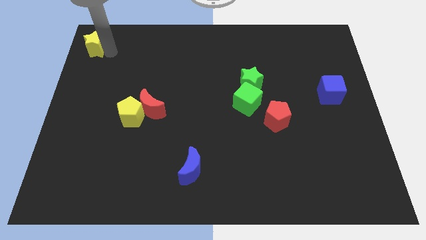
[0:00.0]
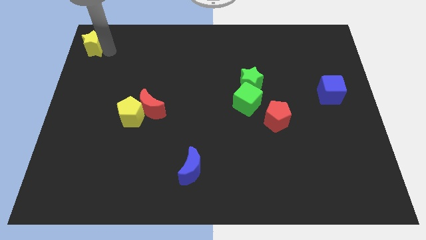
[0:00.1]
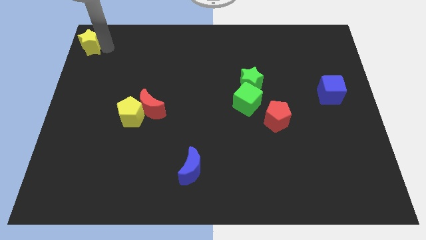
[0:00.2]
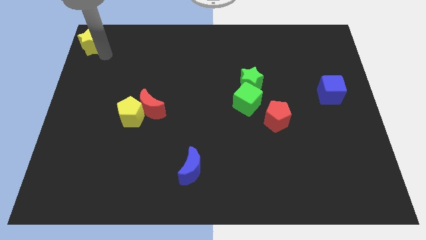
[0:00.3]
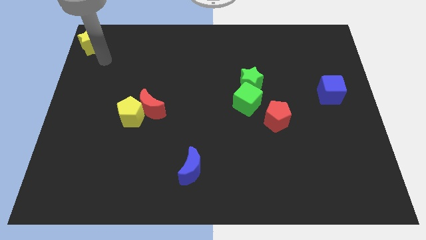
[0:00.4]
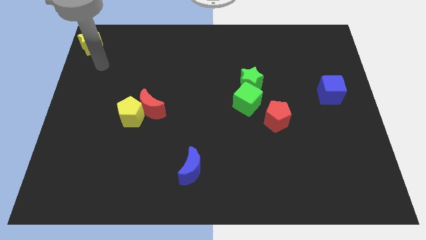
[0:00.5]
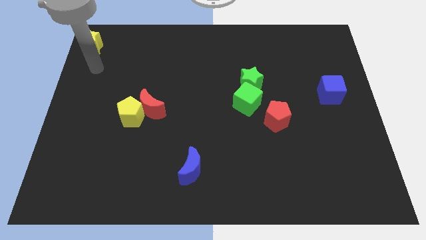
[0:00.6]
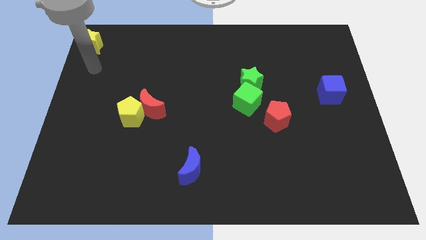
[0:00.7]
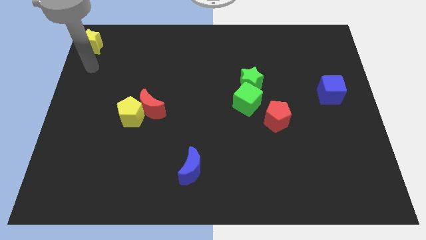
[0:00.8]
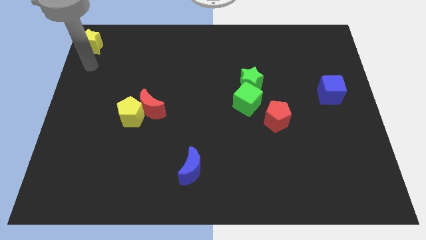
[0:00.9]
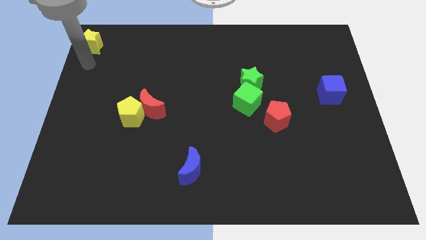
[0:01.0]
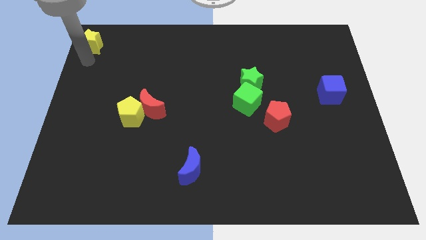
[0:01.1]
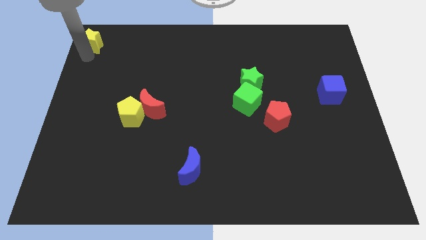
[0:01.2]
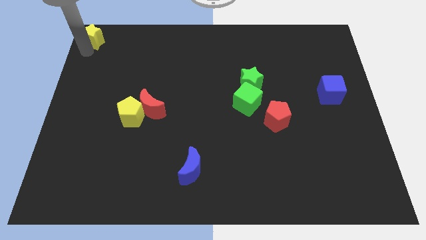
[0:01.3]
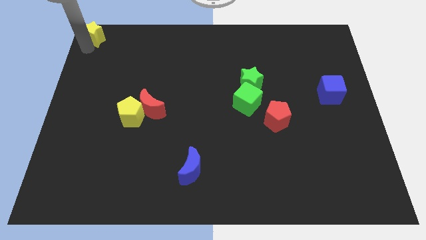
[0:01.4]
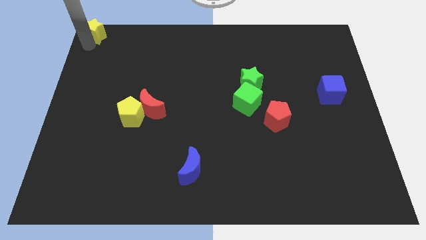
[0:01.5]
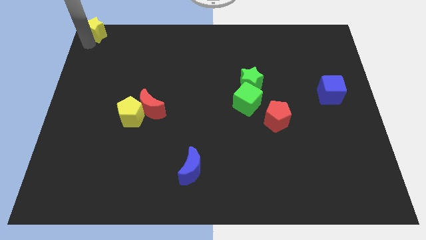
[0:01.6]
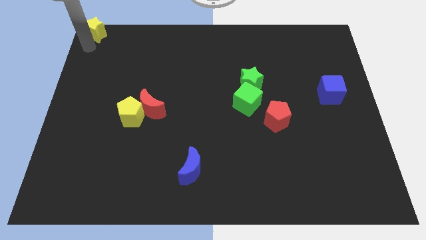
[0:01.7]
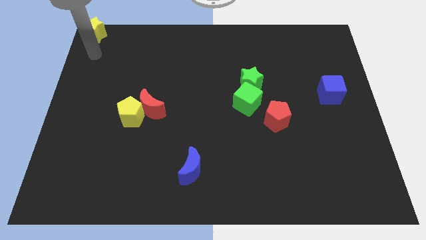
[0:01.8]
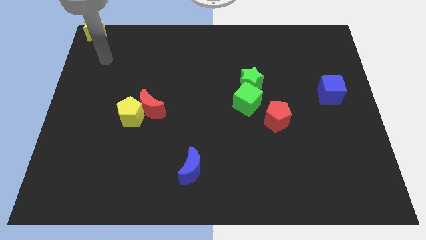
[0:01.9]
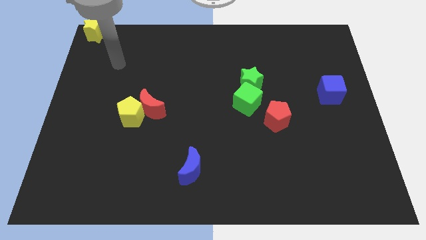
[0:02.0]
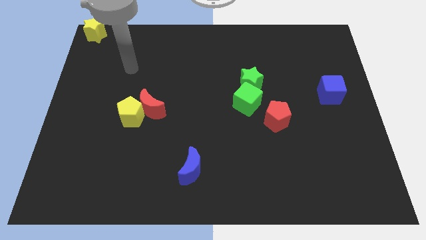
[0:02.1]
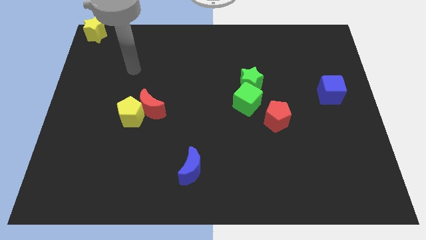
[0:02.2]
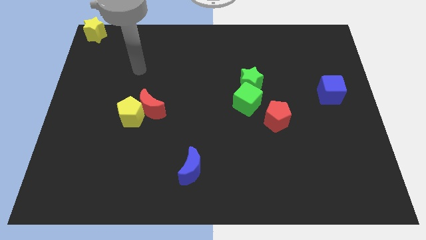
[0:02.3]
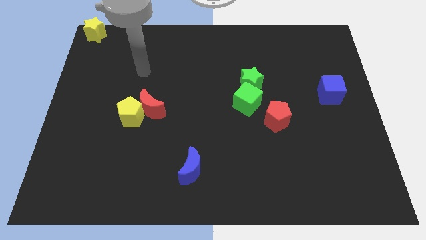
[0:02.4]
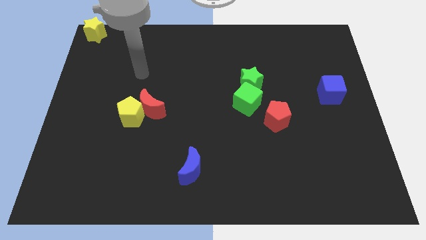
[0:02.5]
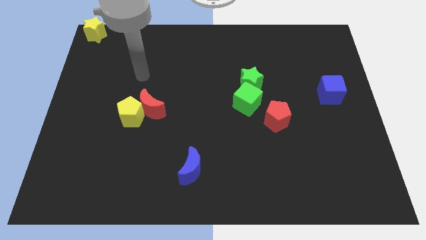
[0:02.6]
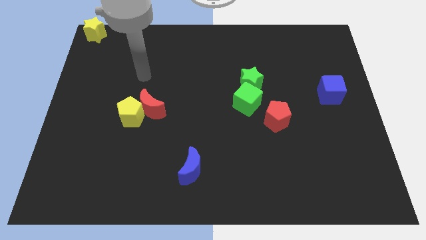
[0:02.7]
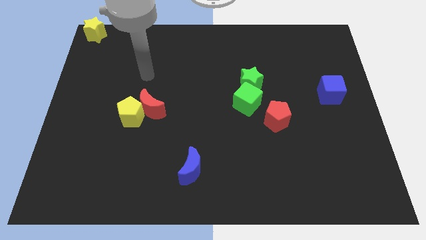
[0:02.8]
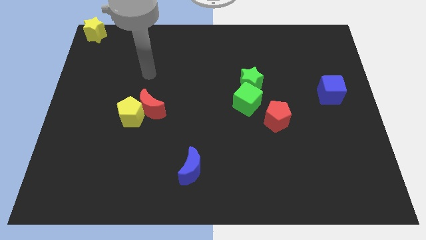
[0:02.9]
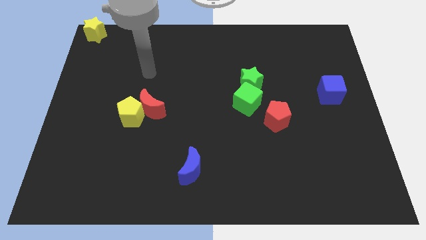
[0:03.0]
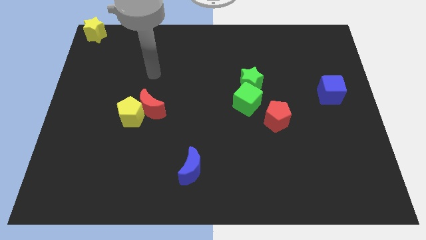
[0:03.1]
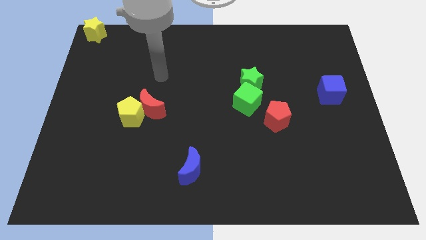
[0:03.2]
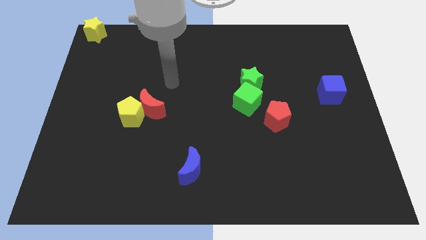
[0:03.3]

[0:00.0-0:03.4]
place the yellow star to the top right

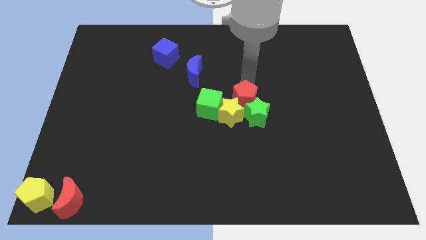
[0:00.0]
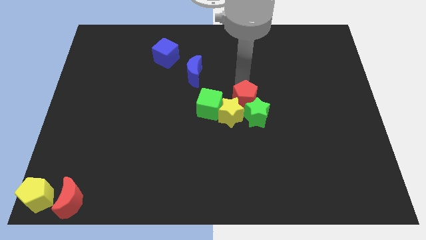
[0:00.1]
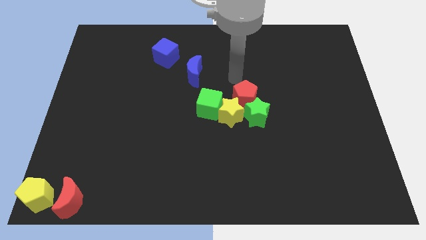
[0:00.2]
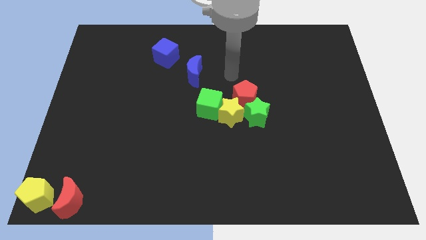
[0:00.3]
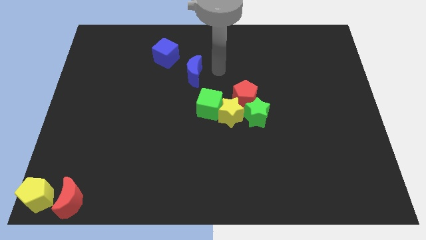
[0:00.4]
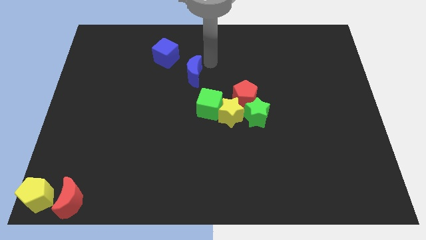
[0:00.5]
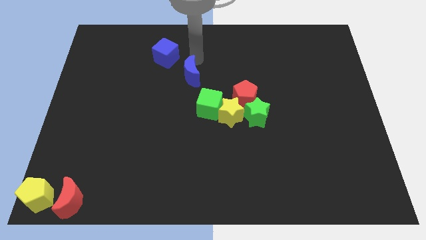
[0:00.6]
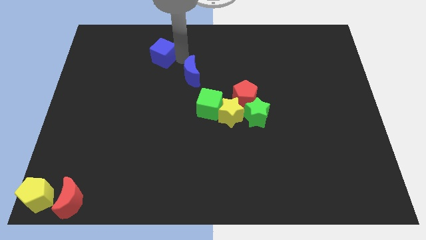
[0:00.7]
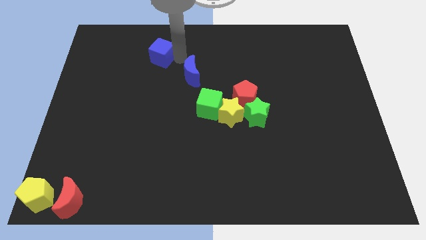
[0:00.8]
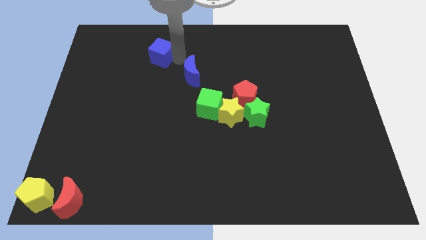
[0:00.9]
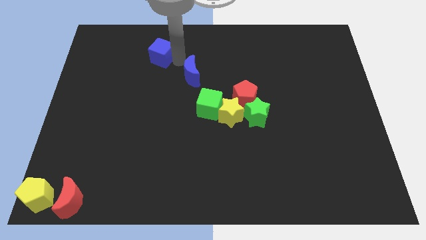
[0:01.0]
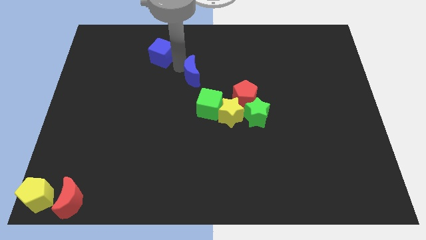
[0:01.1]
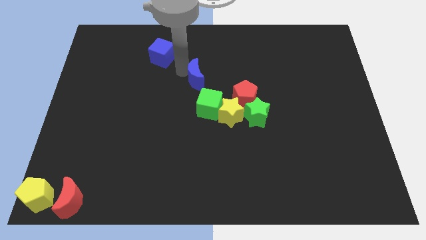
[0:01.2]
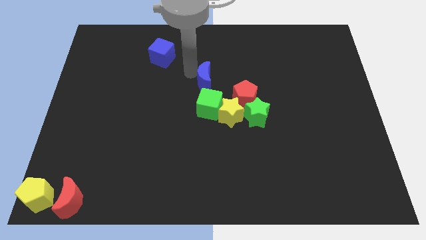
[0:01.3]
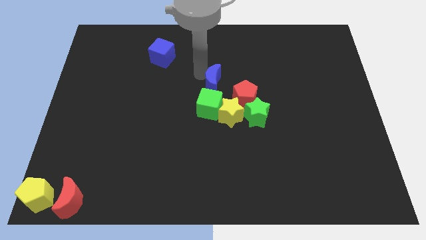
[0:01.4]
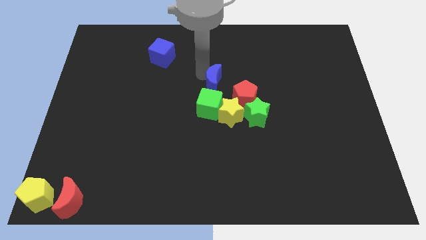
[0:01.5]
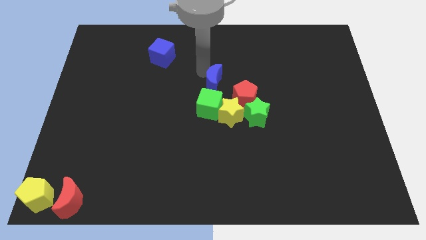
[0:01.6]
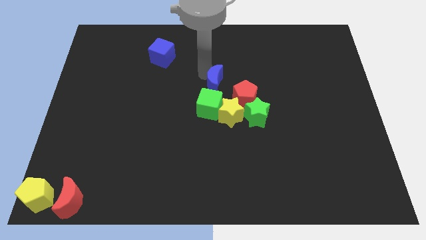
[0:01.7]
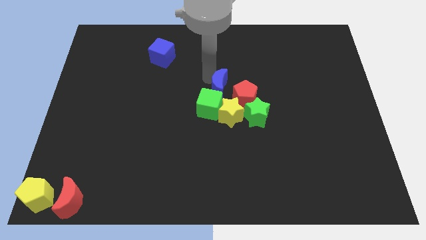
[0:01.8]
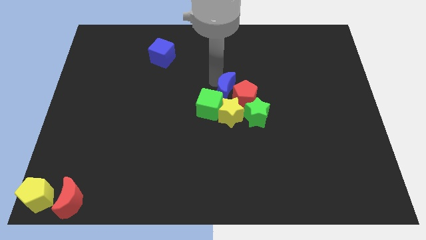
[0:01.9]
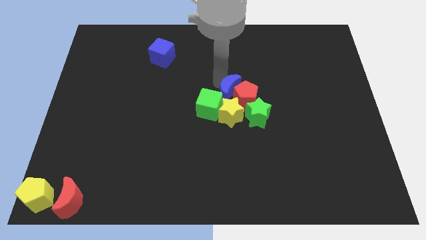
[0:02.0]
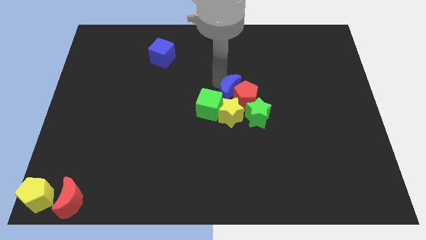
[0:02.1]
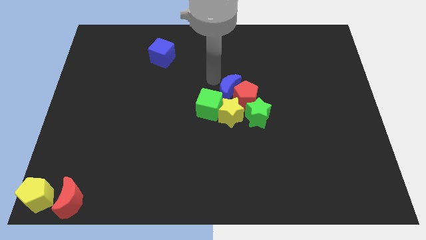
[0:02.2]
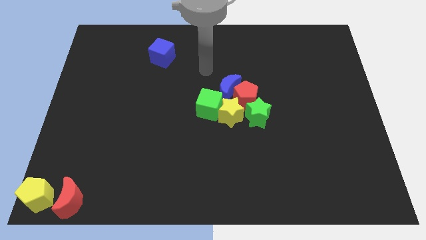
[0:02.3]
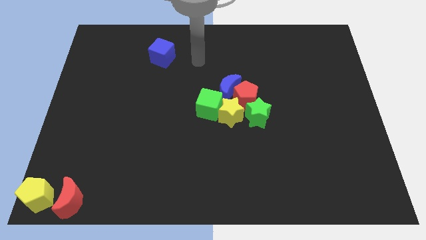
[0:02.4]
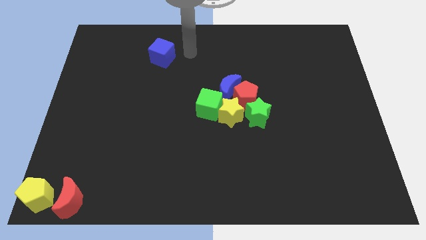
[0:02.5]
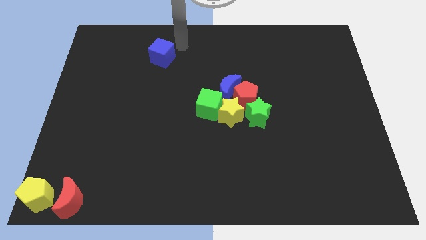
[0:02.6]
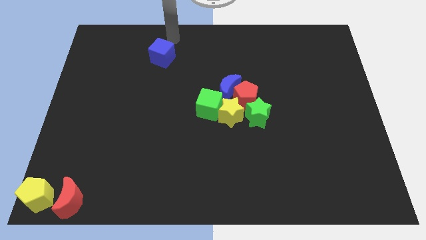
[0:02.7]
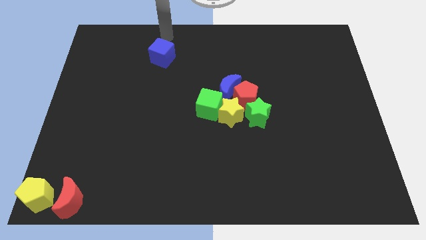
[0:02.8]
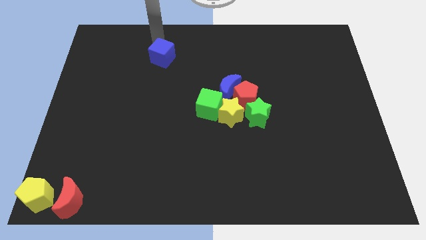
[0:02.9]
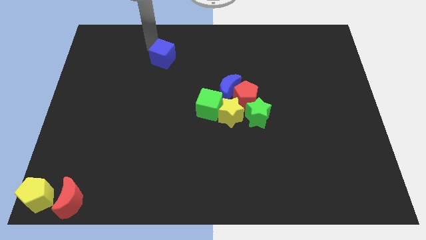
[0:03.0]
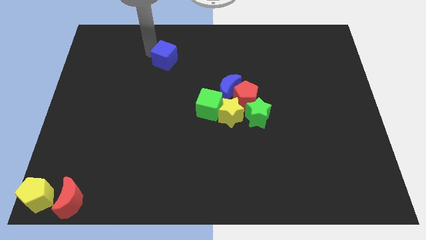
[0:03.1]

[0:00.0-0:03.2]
move the blue crescent towards the topa of the red pentagon

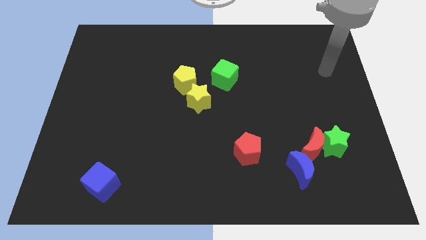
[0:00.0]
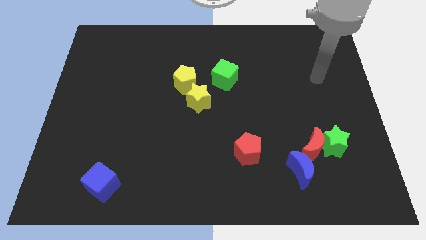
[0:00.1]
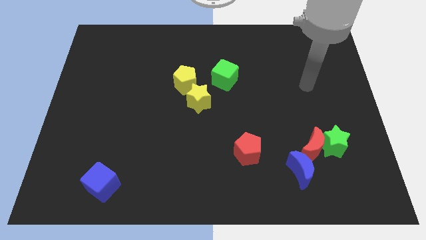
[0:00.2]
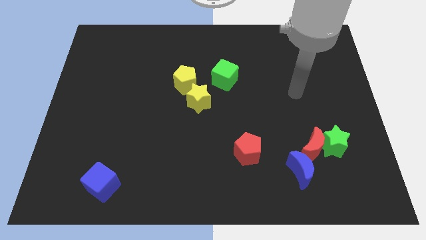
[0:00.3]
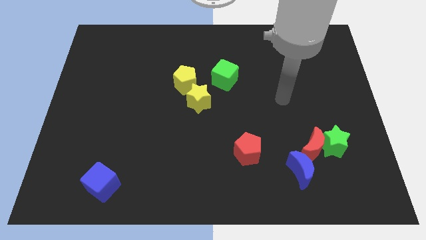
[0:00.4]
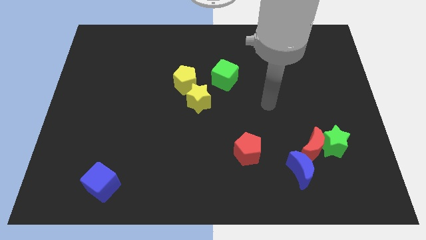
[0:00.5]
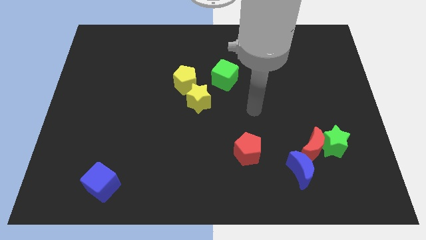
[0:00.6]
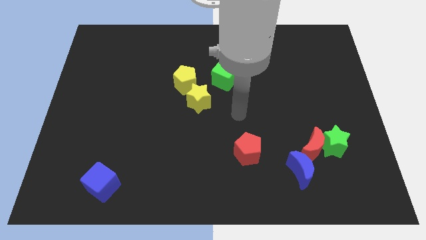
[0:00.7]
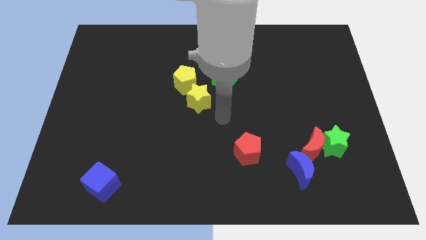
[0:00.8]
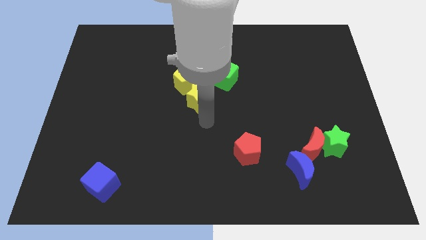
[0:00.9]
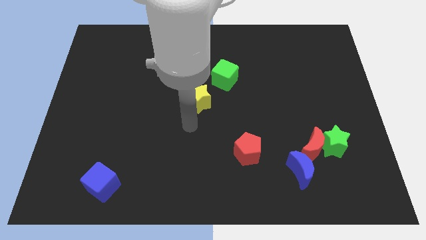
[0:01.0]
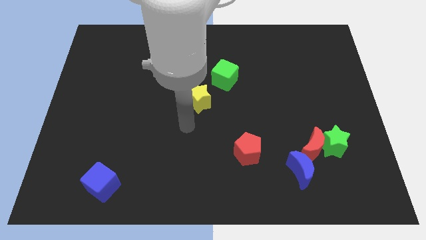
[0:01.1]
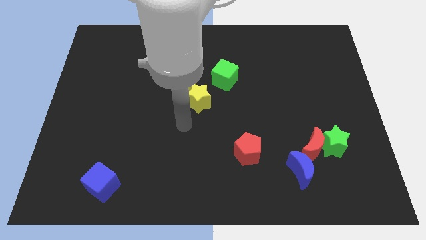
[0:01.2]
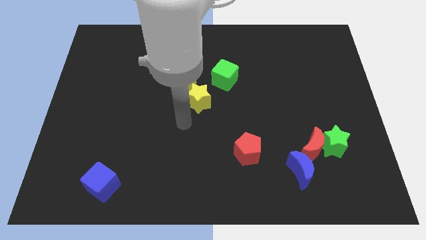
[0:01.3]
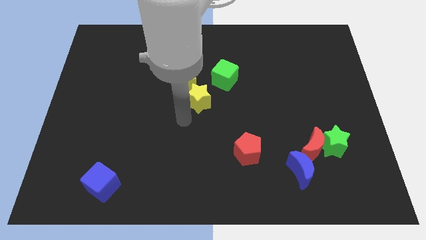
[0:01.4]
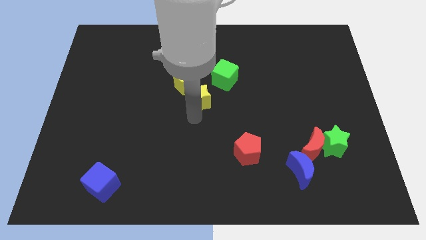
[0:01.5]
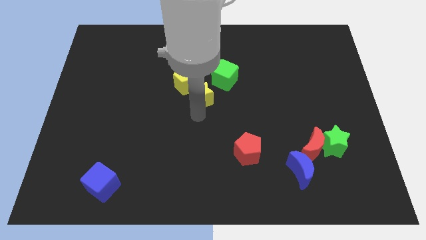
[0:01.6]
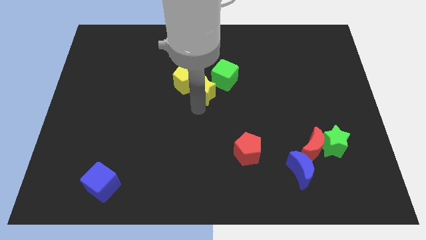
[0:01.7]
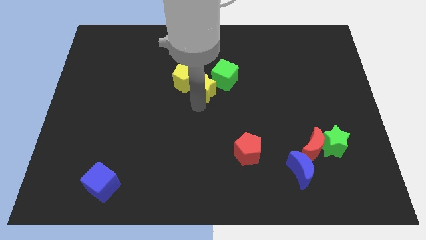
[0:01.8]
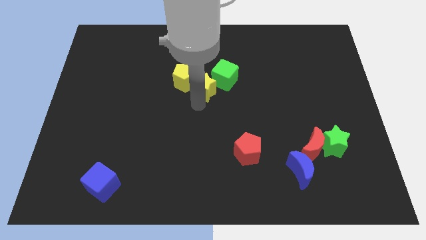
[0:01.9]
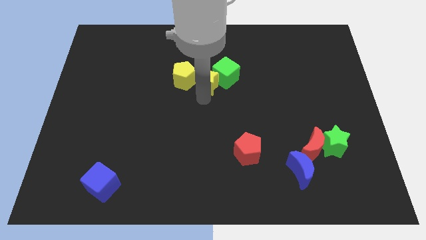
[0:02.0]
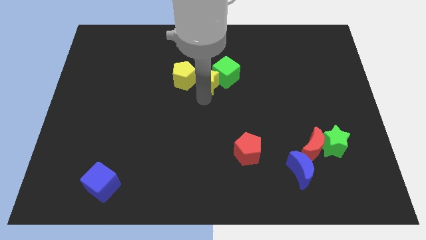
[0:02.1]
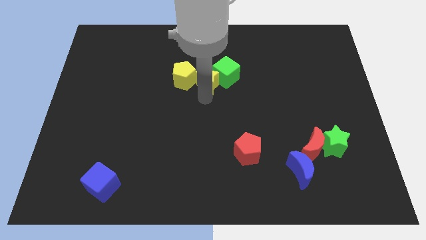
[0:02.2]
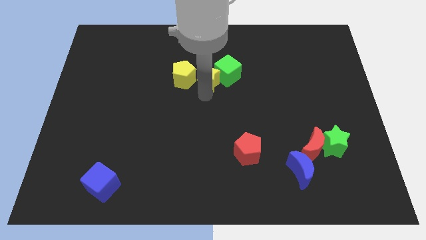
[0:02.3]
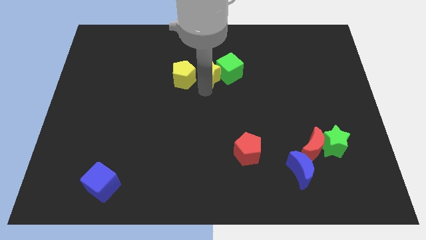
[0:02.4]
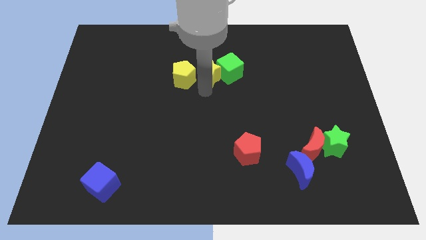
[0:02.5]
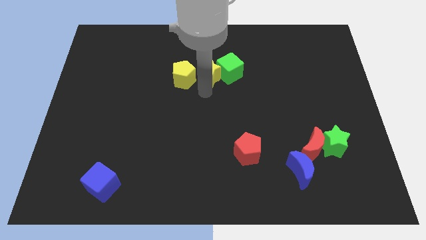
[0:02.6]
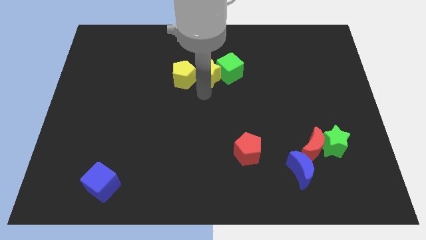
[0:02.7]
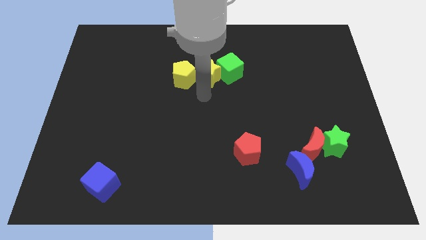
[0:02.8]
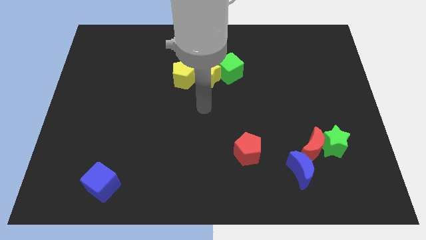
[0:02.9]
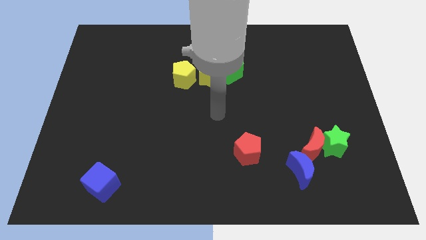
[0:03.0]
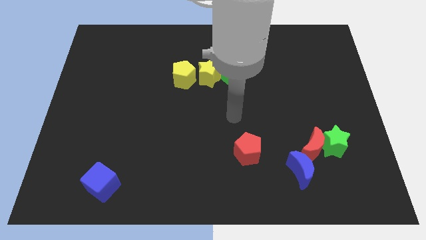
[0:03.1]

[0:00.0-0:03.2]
push the yellow star to the left of green cube
